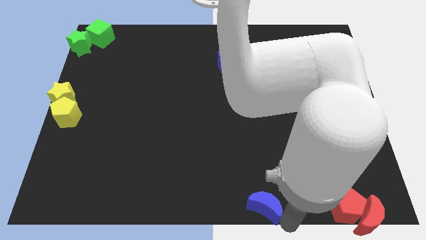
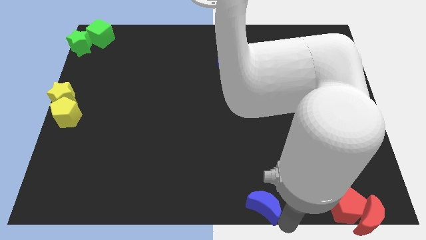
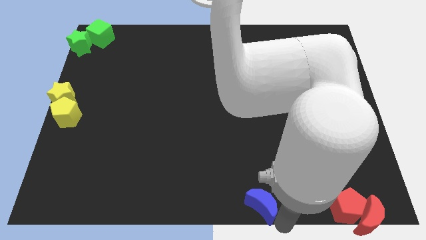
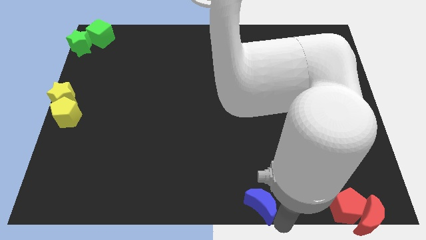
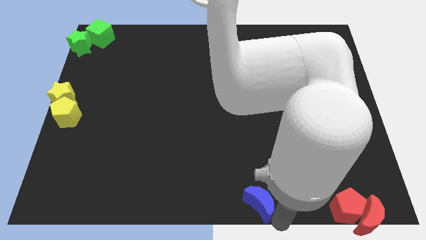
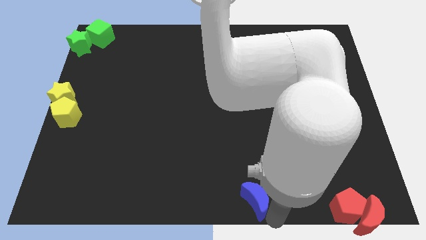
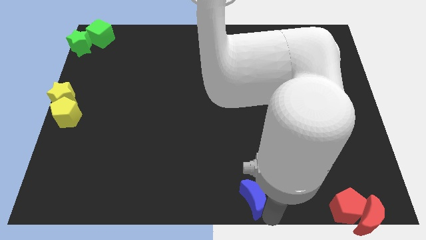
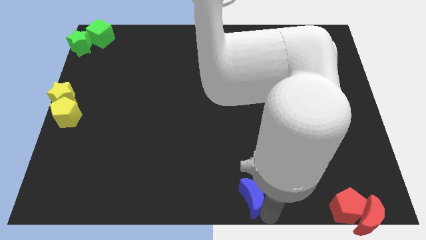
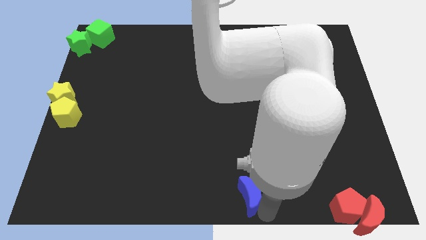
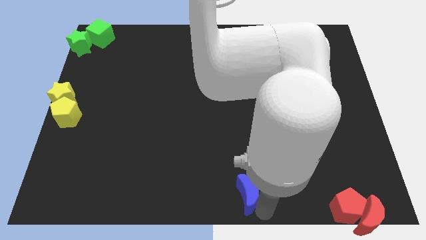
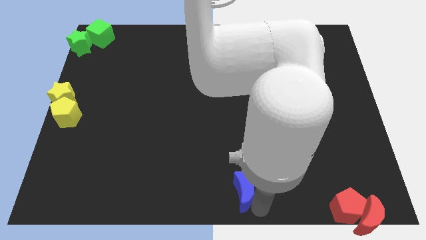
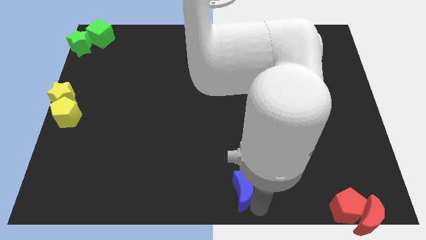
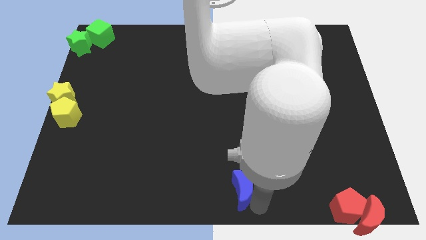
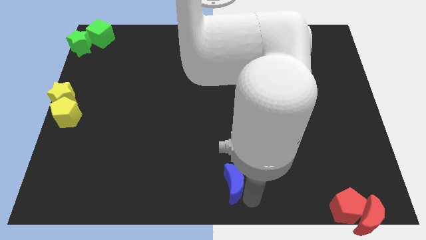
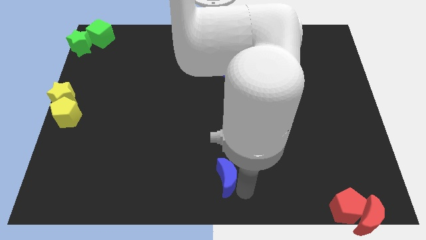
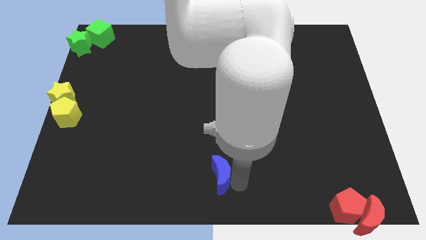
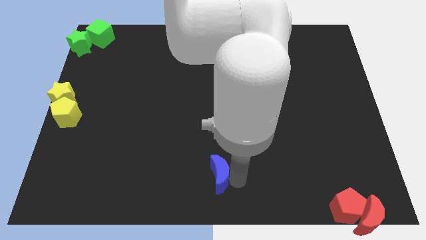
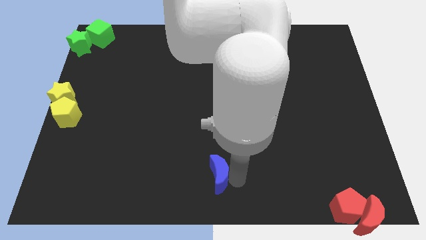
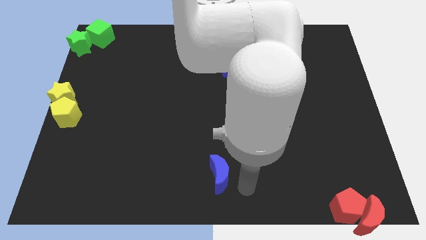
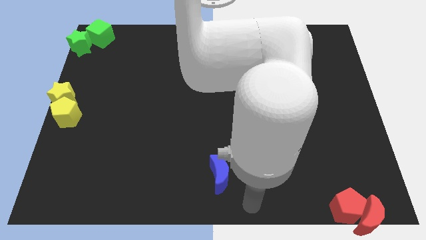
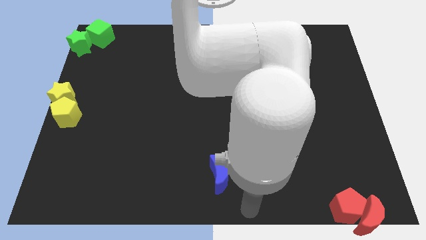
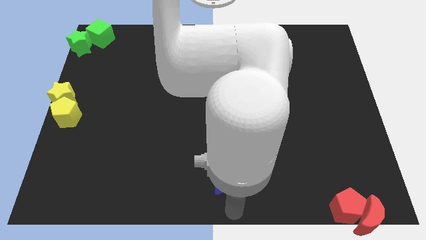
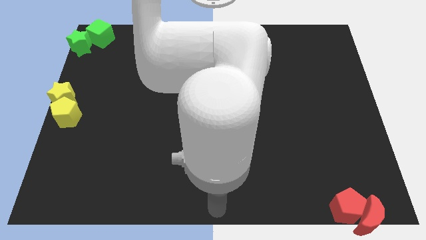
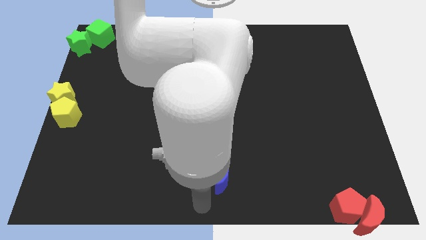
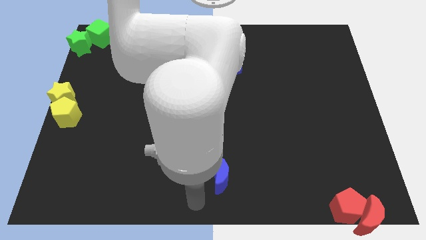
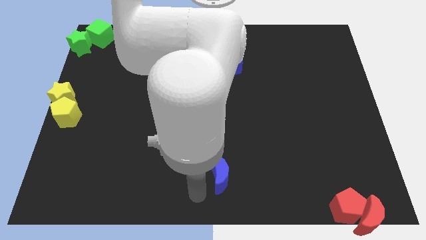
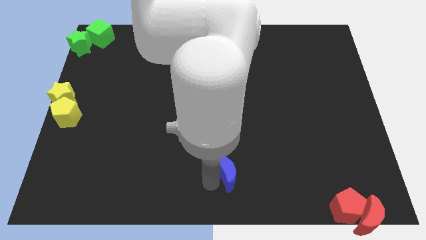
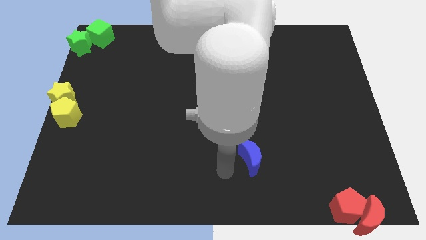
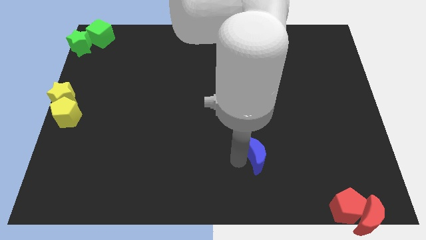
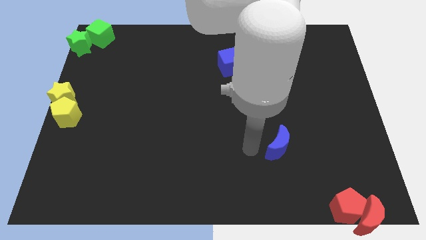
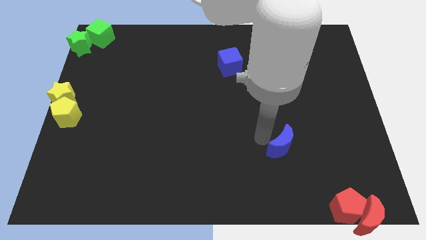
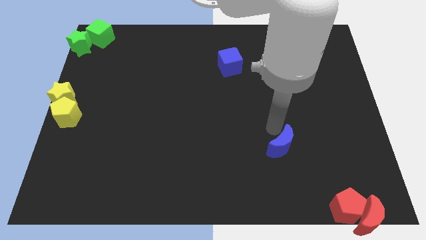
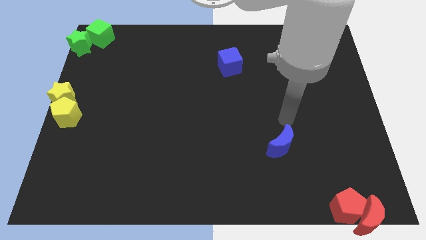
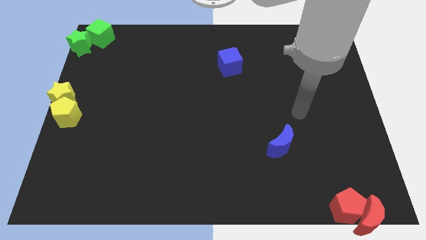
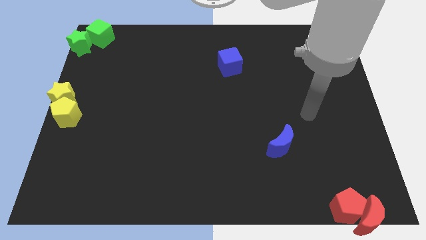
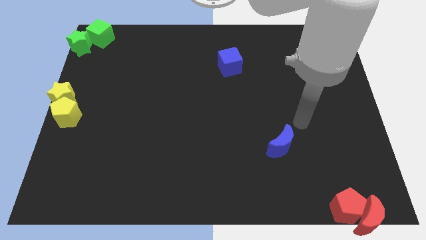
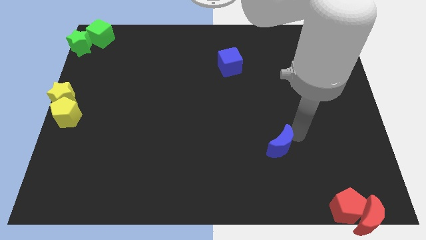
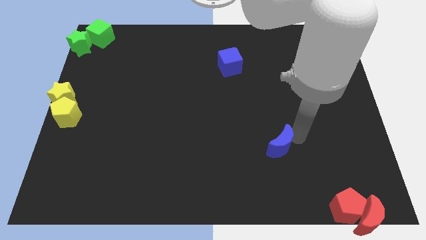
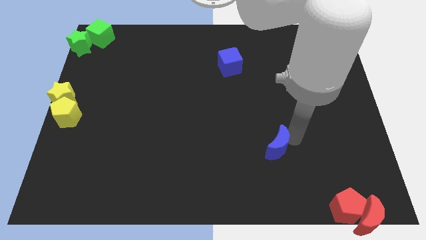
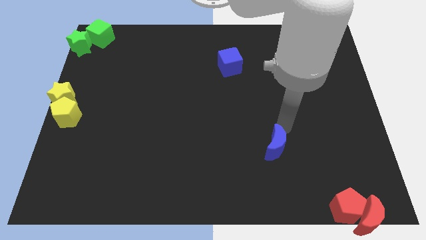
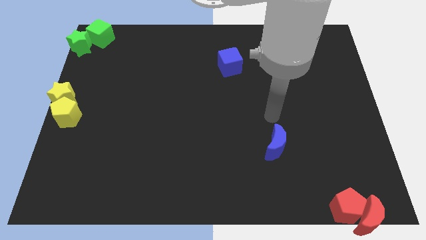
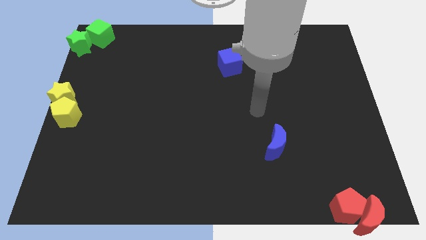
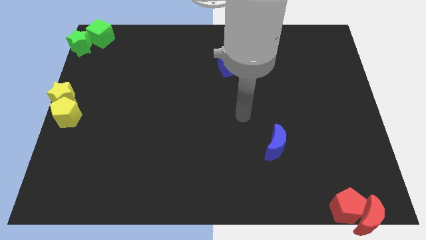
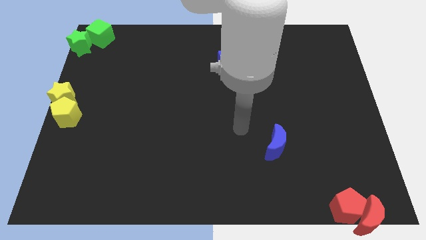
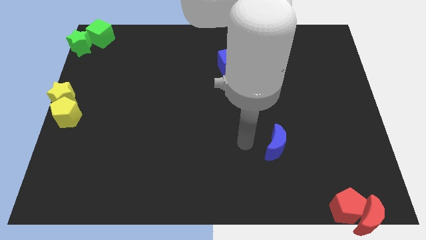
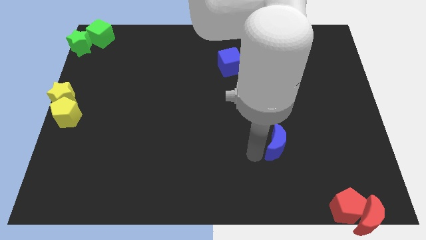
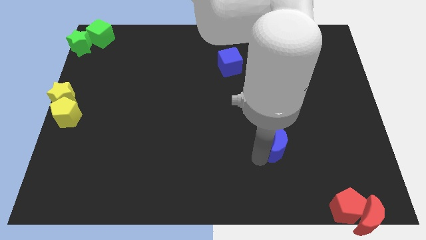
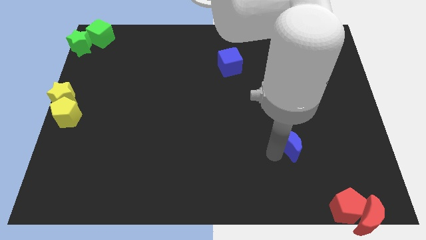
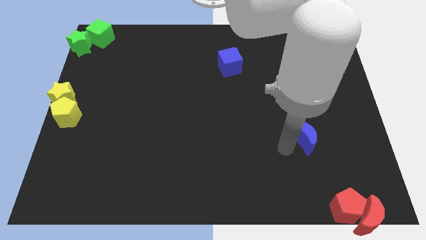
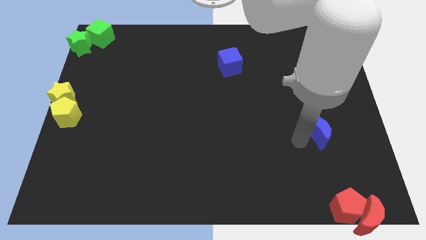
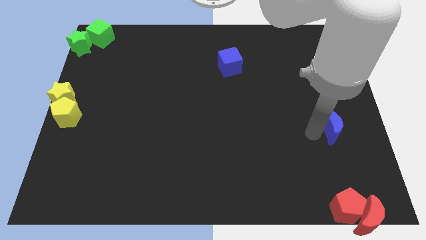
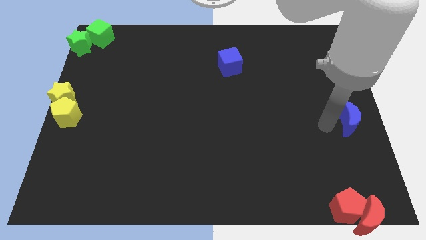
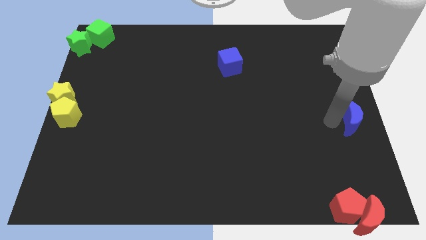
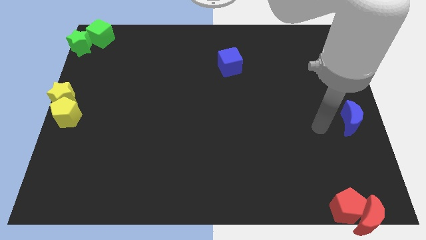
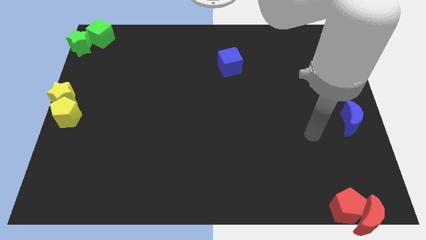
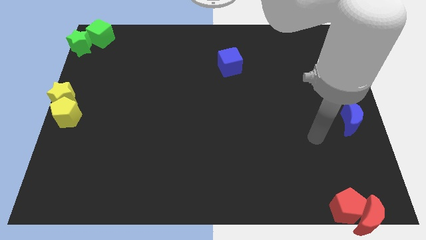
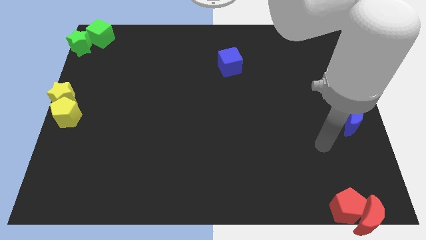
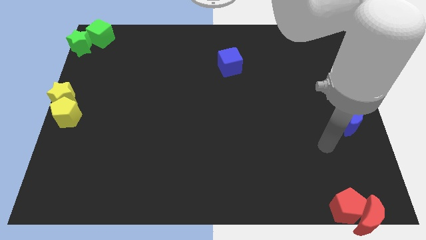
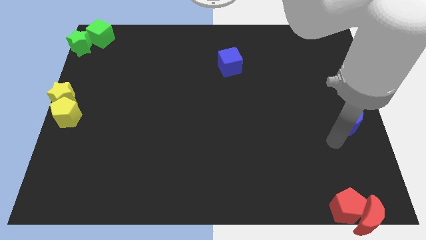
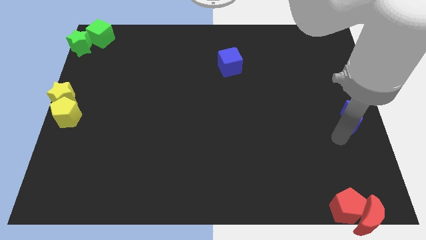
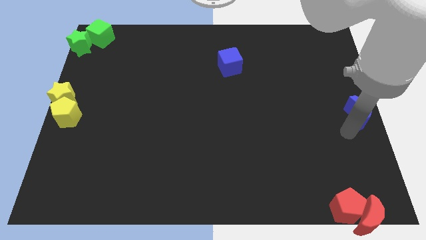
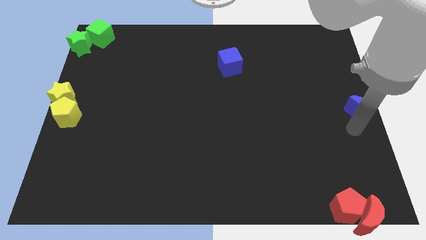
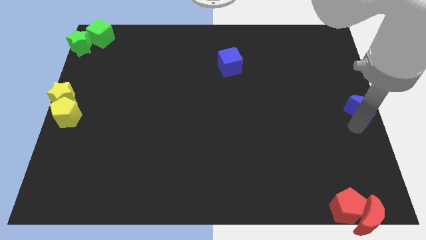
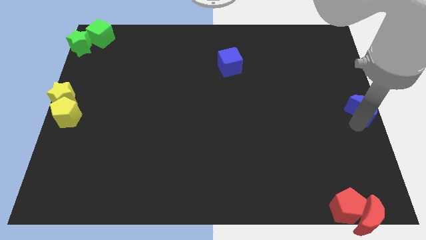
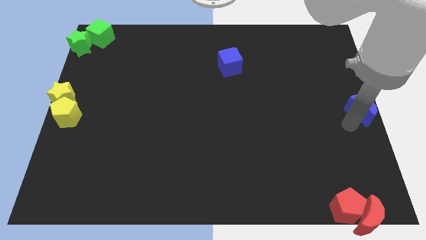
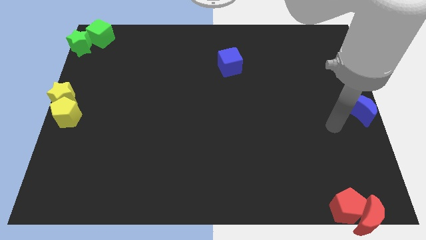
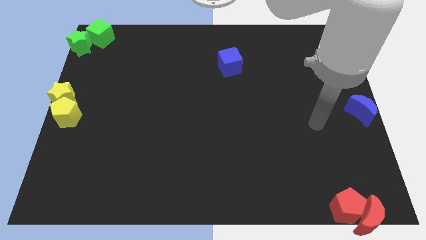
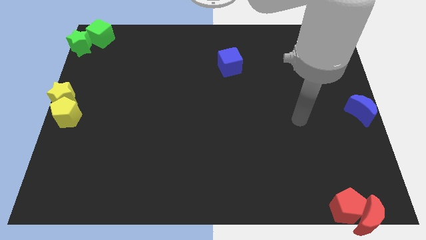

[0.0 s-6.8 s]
place blue cube at the center right of the board

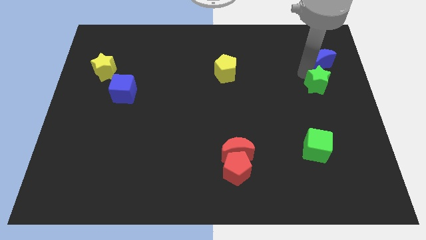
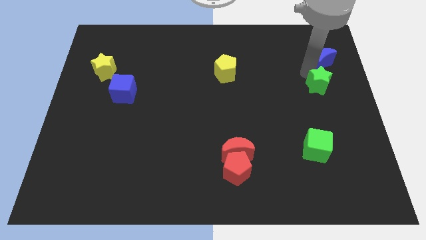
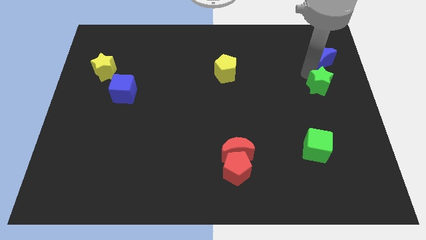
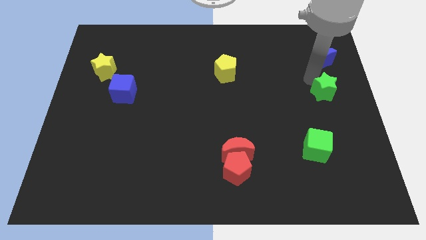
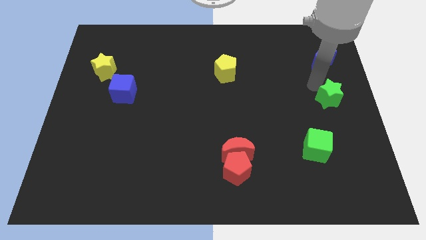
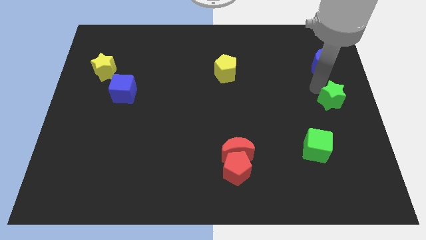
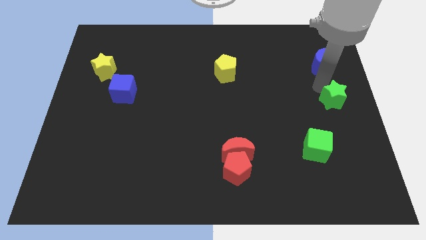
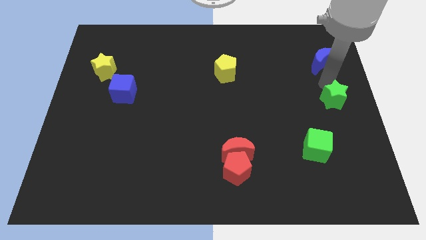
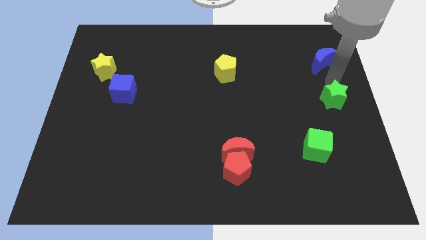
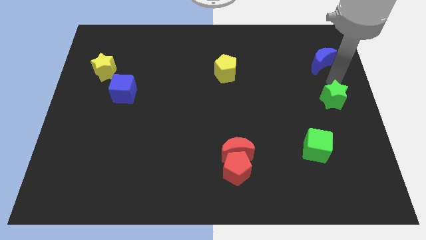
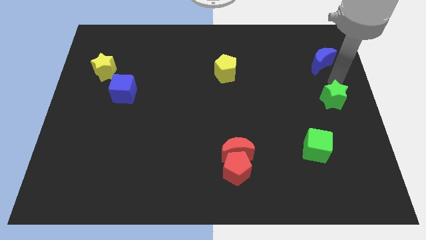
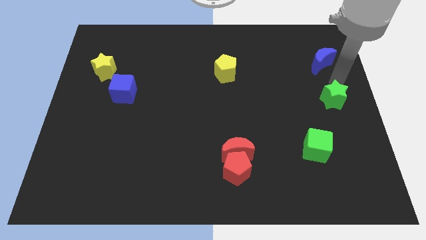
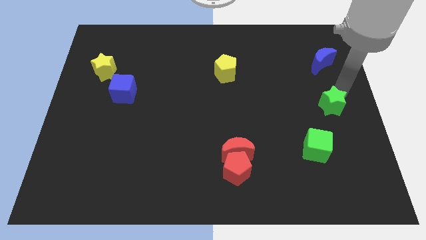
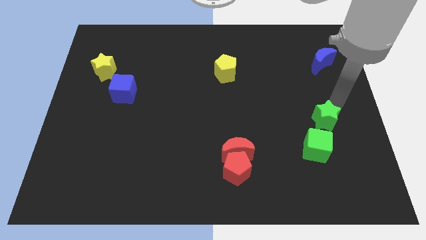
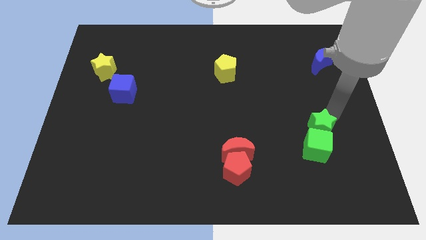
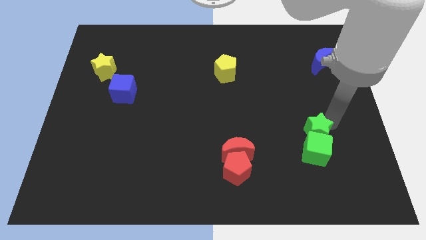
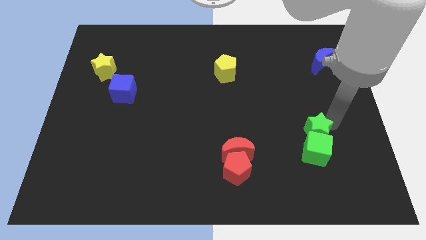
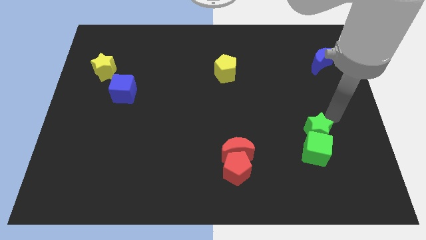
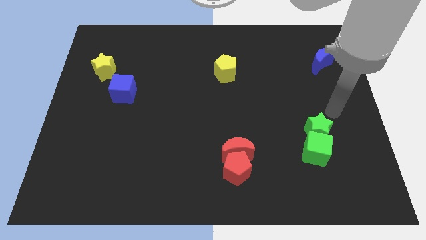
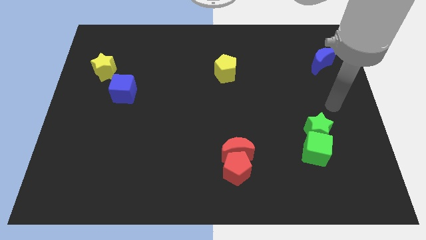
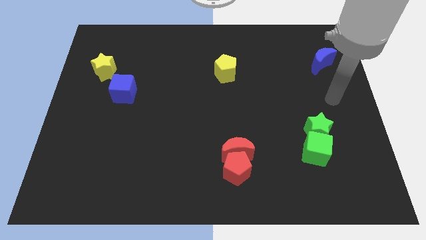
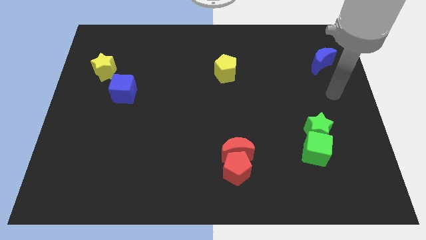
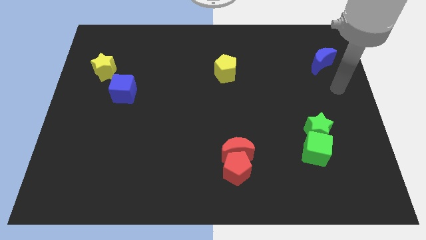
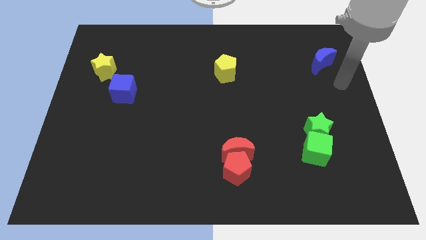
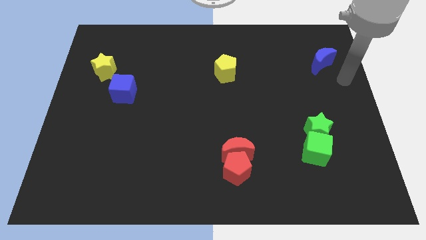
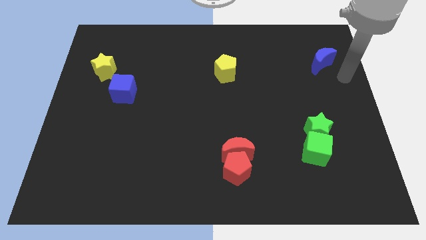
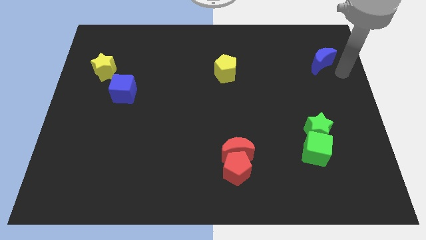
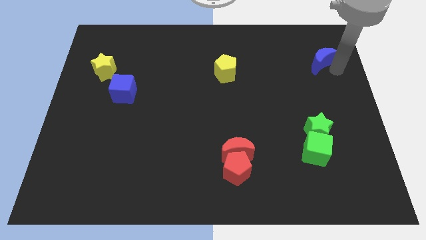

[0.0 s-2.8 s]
move the green star near to the green cube
